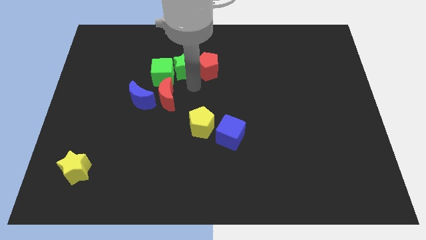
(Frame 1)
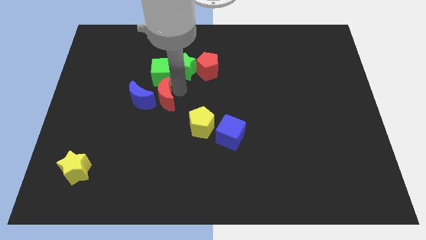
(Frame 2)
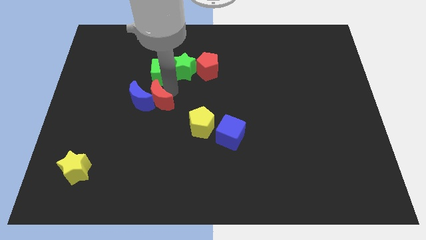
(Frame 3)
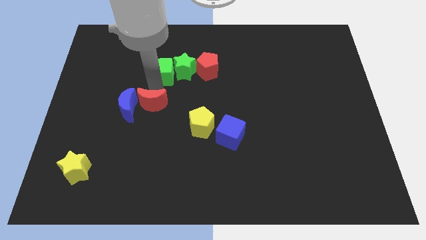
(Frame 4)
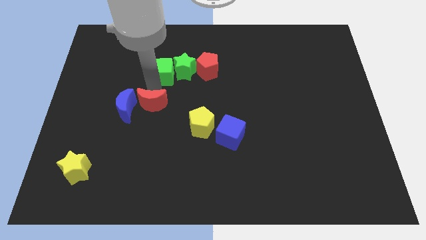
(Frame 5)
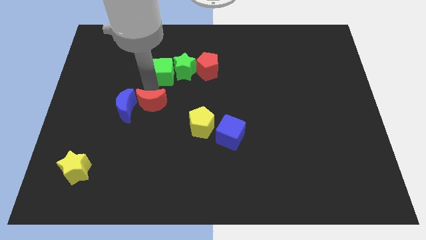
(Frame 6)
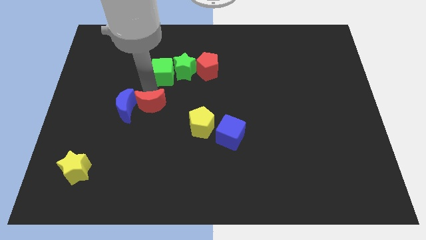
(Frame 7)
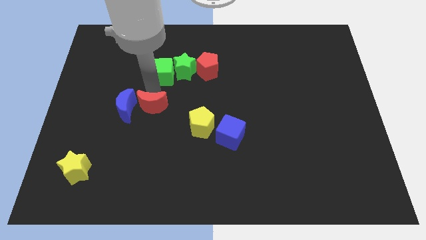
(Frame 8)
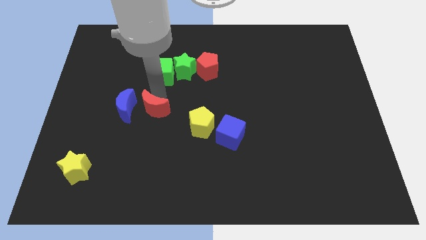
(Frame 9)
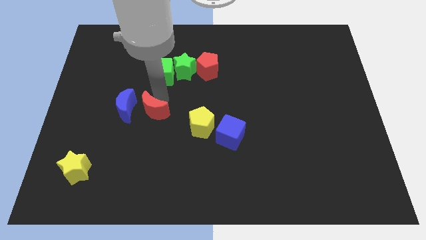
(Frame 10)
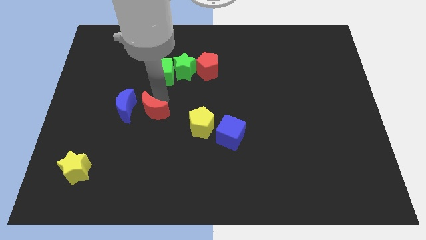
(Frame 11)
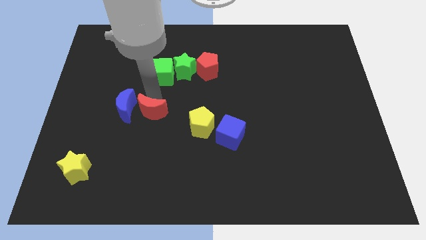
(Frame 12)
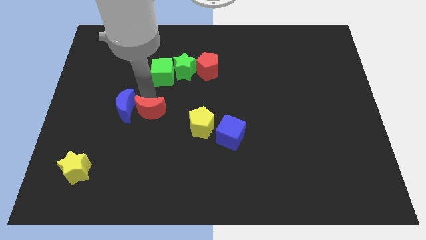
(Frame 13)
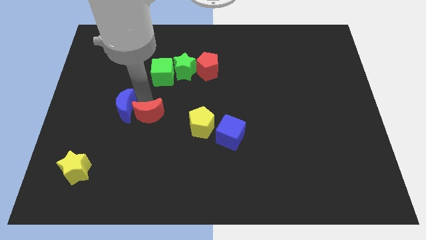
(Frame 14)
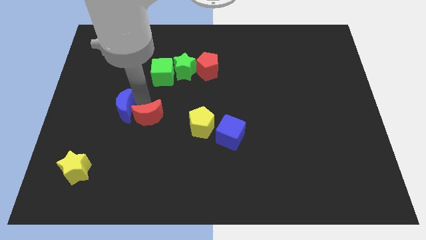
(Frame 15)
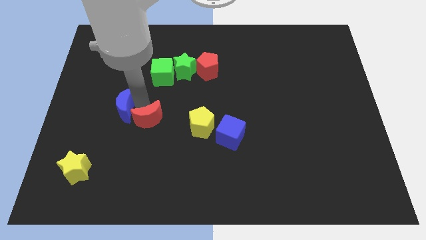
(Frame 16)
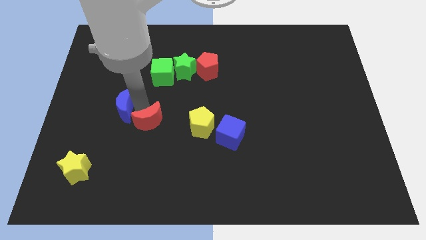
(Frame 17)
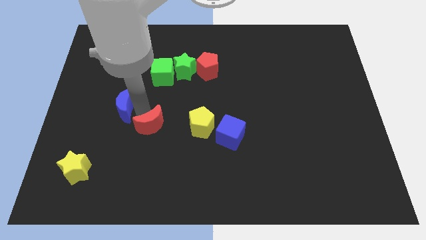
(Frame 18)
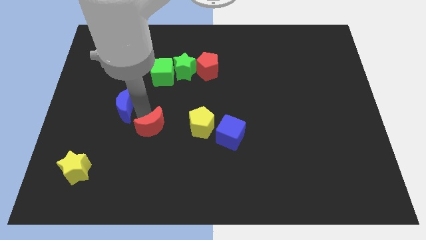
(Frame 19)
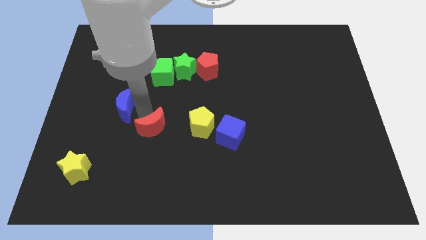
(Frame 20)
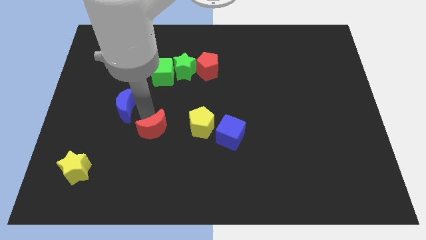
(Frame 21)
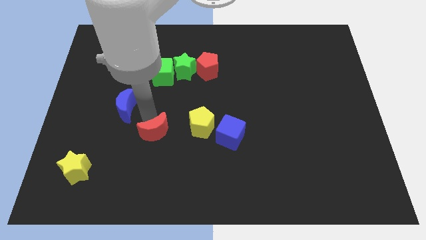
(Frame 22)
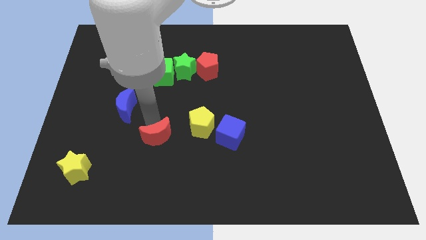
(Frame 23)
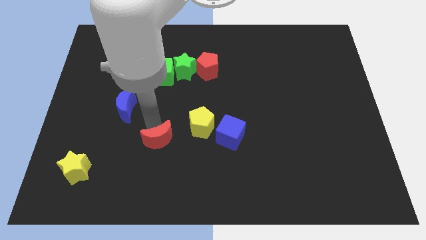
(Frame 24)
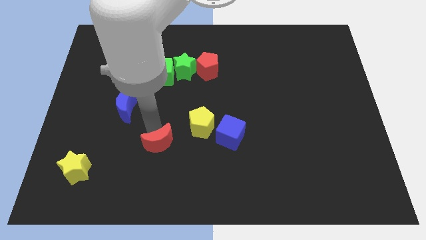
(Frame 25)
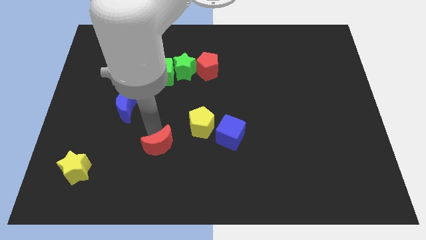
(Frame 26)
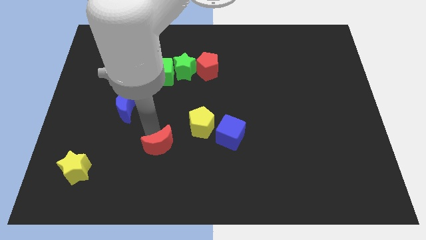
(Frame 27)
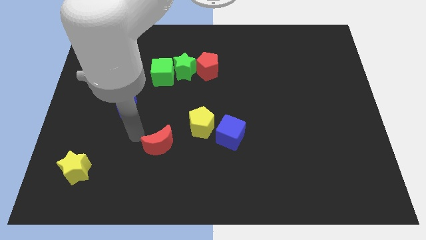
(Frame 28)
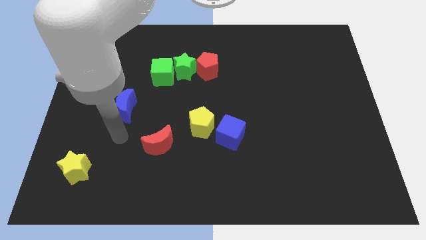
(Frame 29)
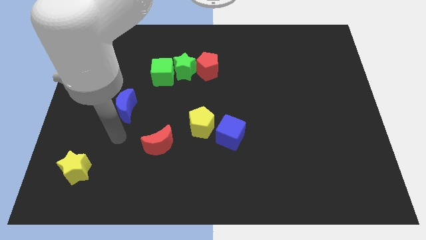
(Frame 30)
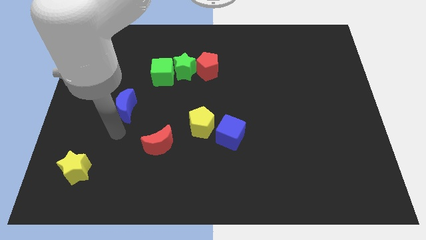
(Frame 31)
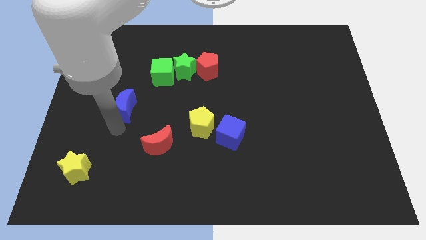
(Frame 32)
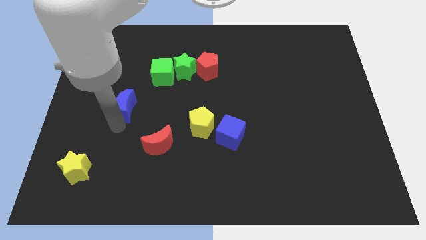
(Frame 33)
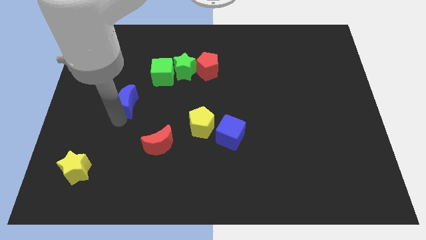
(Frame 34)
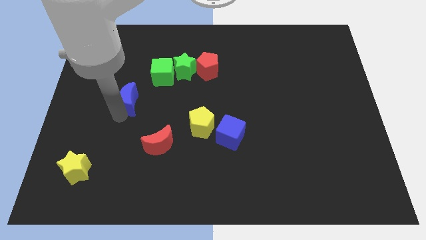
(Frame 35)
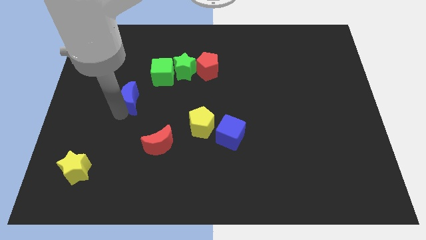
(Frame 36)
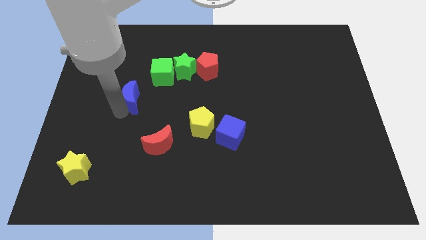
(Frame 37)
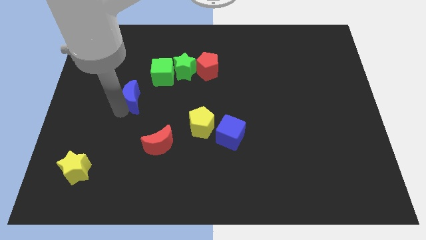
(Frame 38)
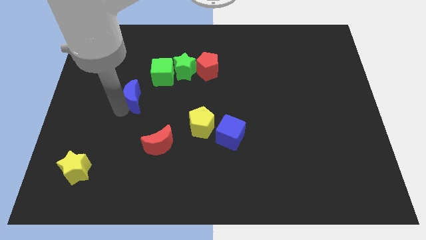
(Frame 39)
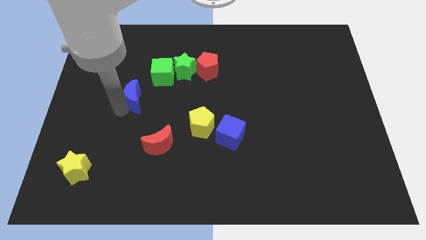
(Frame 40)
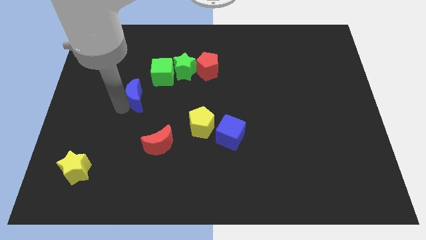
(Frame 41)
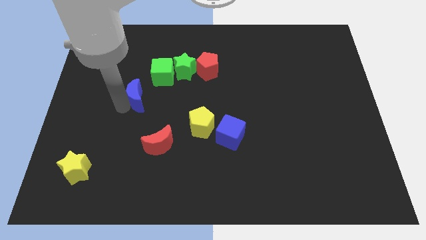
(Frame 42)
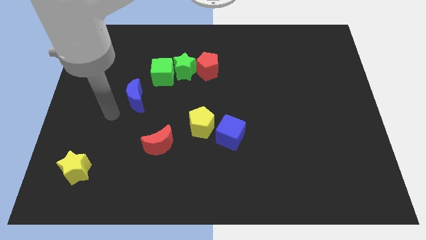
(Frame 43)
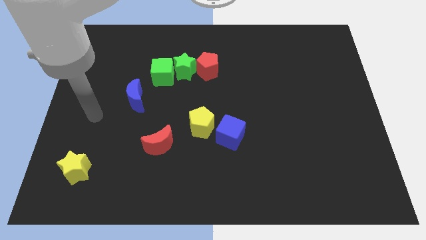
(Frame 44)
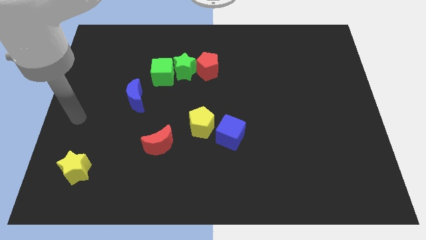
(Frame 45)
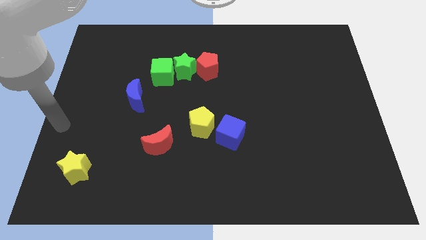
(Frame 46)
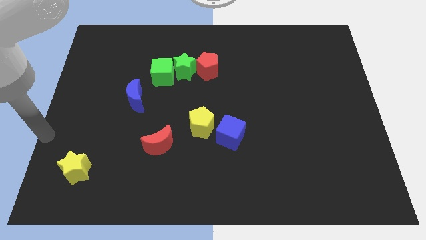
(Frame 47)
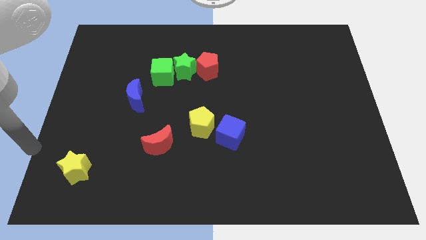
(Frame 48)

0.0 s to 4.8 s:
separate the red and blue crescents from each other

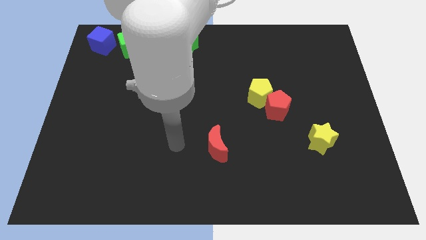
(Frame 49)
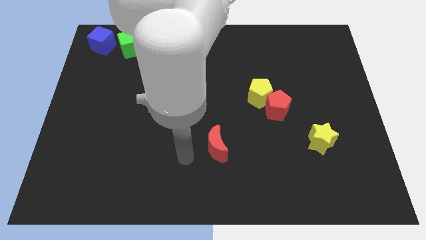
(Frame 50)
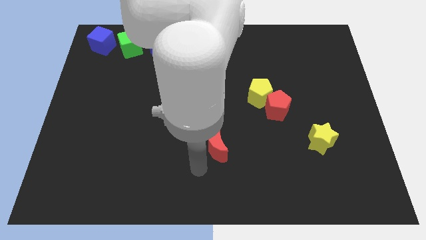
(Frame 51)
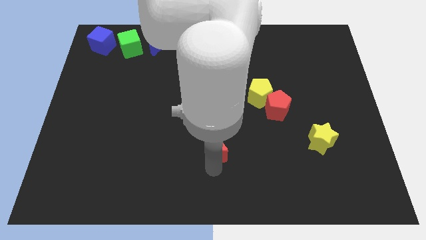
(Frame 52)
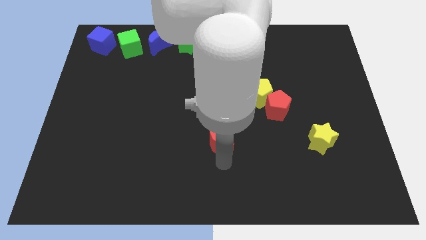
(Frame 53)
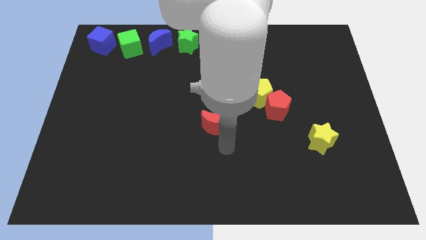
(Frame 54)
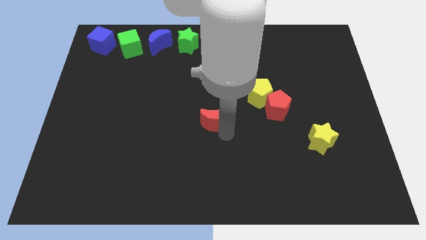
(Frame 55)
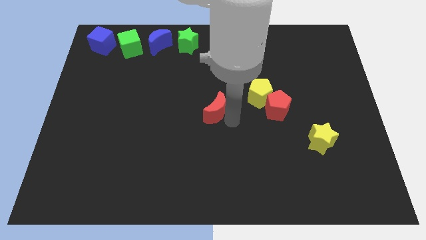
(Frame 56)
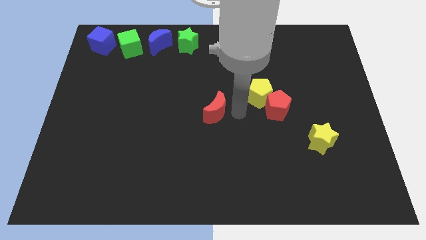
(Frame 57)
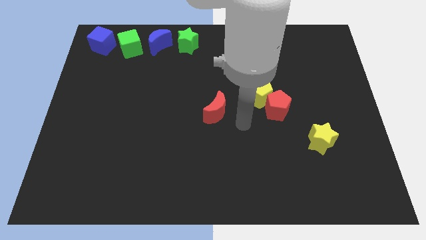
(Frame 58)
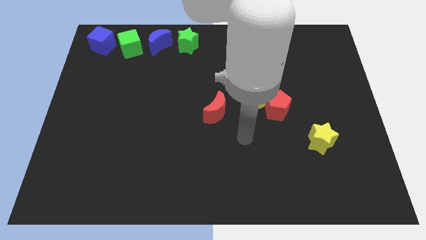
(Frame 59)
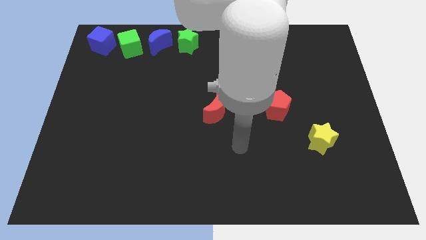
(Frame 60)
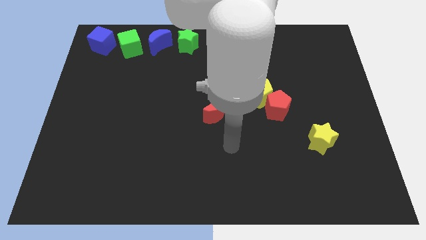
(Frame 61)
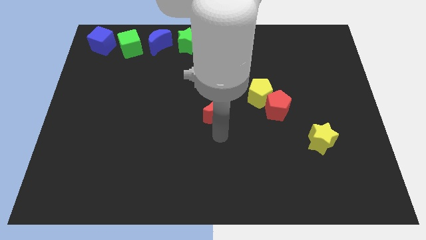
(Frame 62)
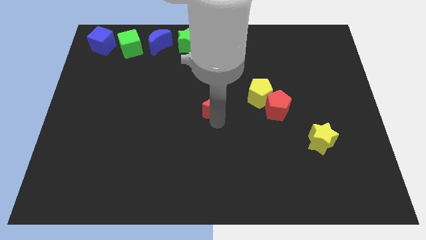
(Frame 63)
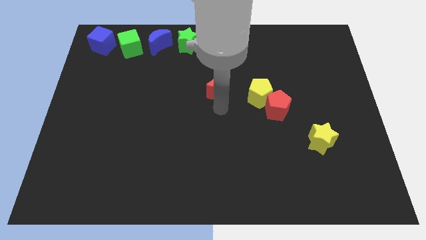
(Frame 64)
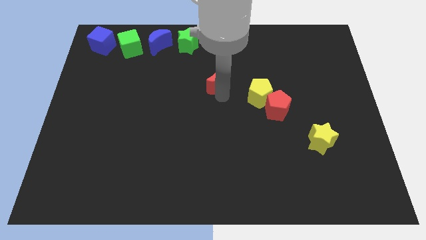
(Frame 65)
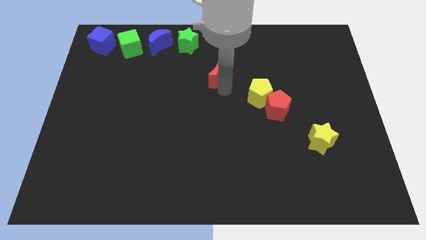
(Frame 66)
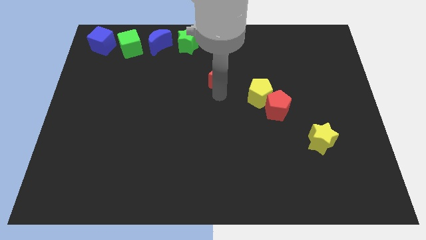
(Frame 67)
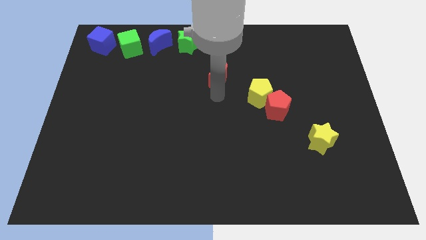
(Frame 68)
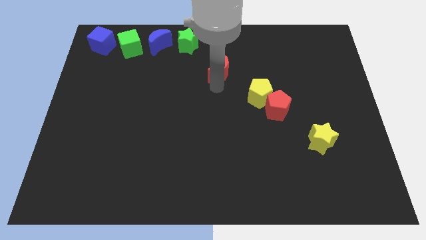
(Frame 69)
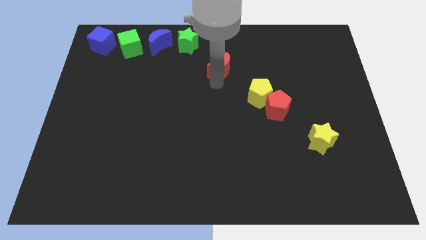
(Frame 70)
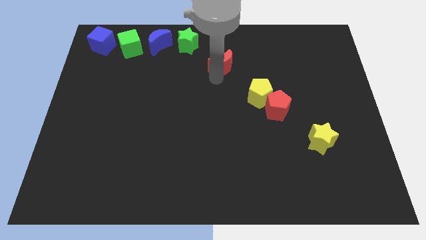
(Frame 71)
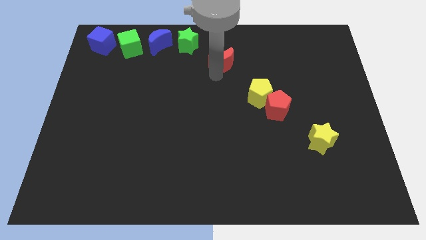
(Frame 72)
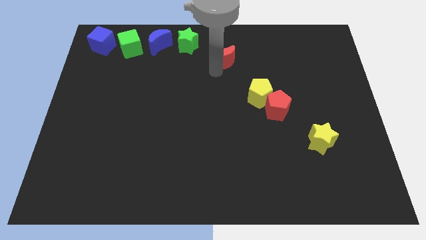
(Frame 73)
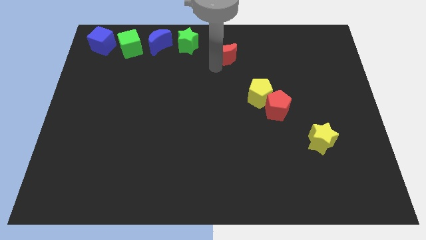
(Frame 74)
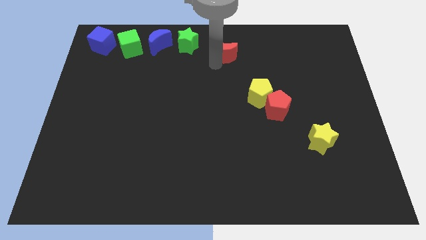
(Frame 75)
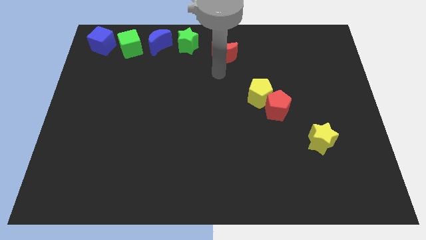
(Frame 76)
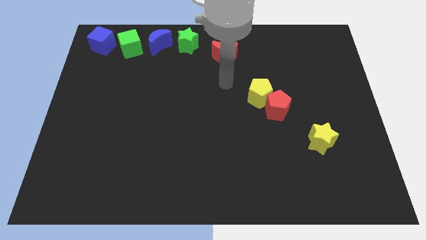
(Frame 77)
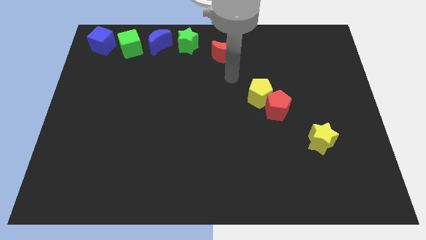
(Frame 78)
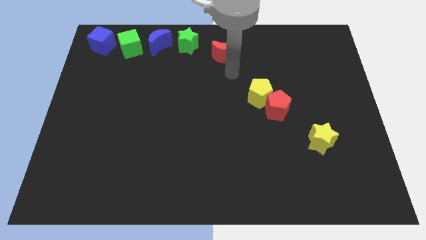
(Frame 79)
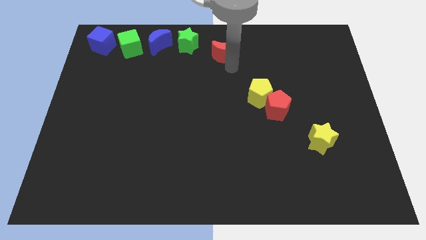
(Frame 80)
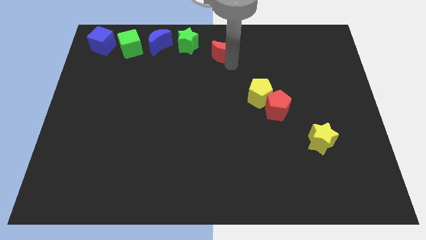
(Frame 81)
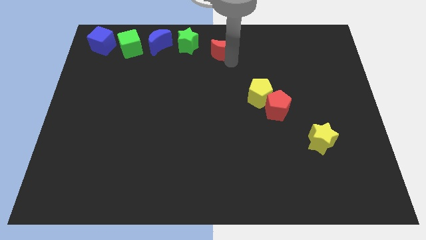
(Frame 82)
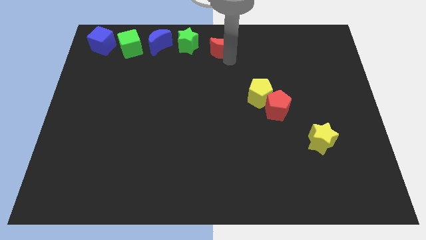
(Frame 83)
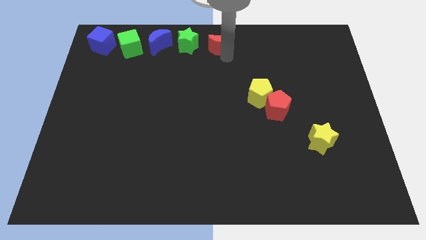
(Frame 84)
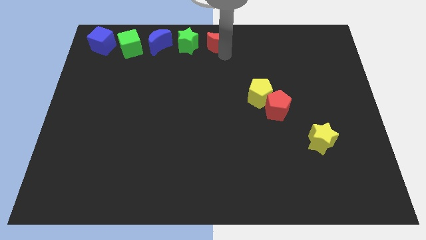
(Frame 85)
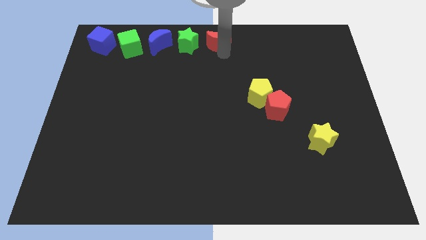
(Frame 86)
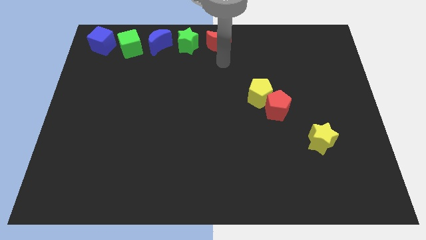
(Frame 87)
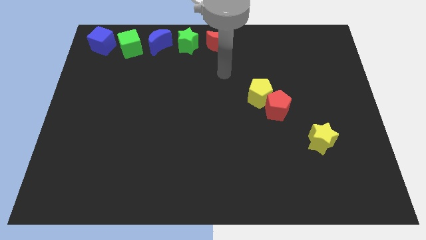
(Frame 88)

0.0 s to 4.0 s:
move red crescent beside green star
